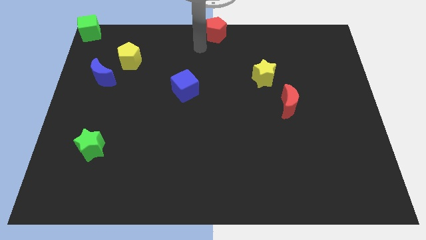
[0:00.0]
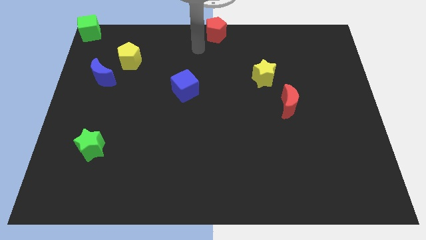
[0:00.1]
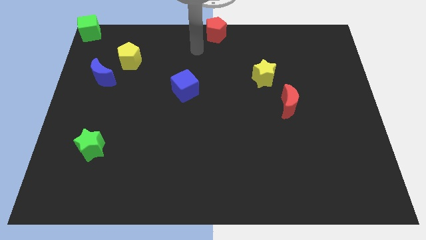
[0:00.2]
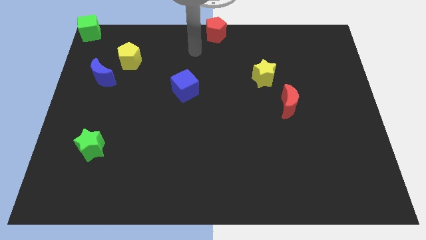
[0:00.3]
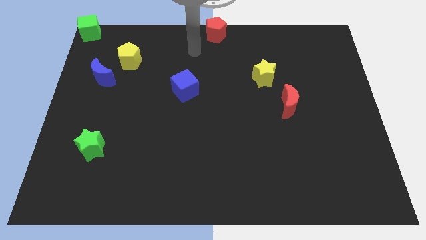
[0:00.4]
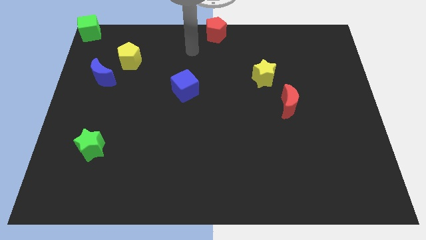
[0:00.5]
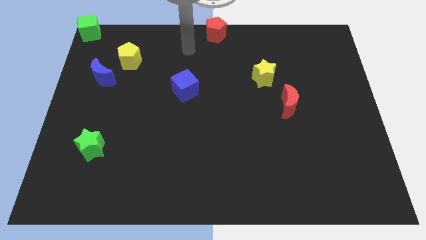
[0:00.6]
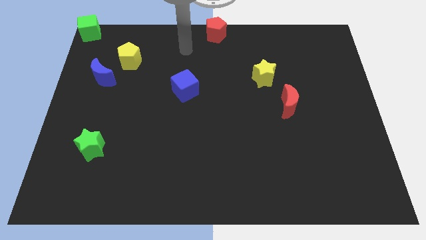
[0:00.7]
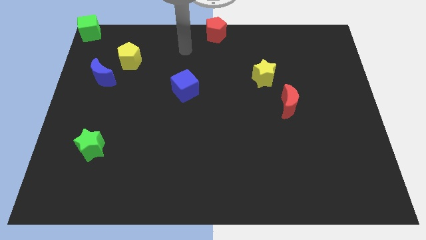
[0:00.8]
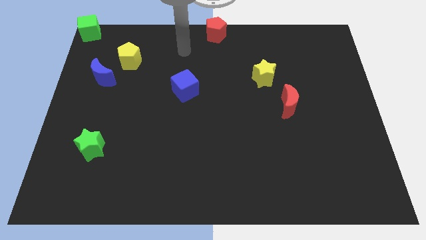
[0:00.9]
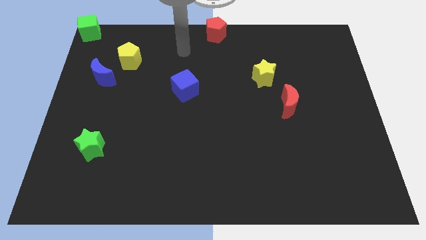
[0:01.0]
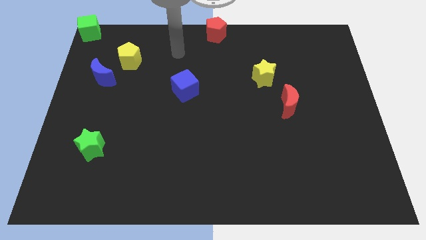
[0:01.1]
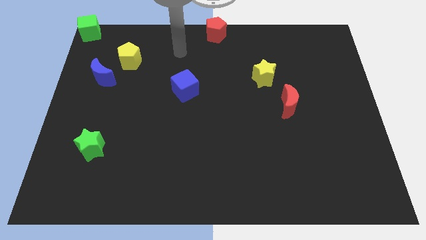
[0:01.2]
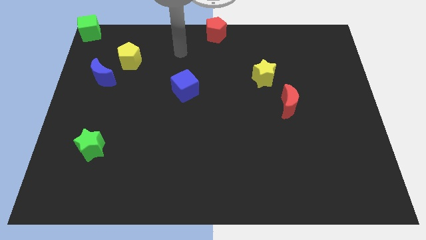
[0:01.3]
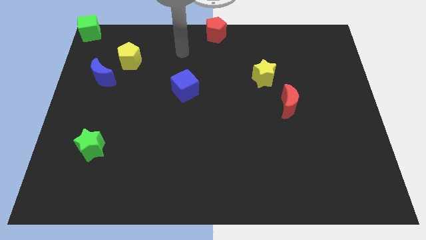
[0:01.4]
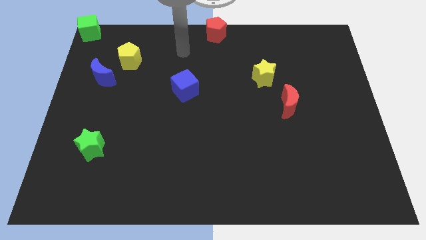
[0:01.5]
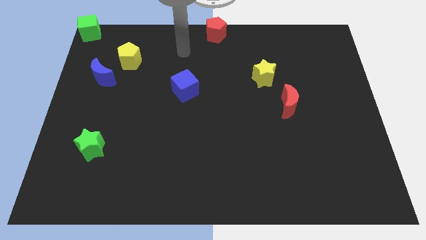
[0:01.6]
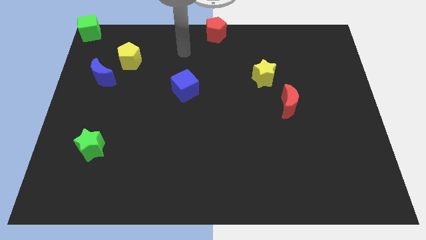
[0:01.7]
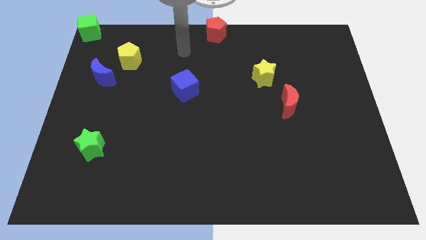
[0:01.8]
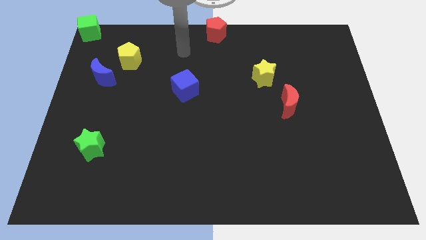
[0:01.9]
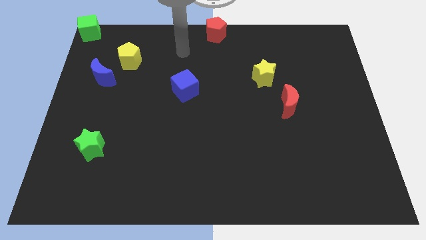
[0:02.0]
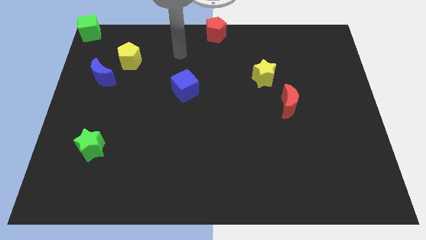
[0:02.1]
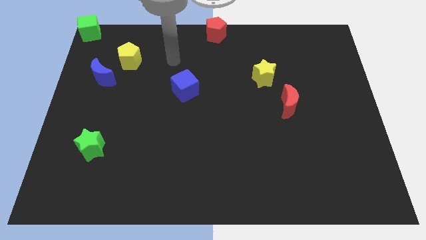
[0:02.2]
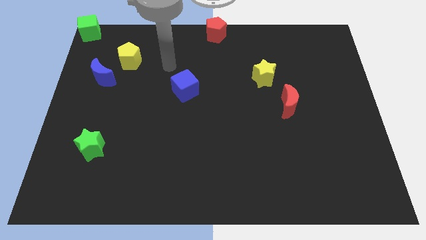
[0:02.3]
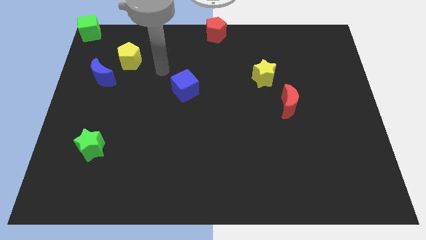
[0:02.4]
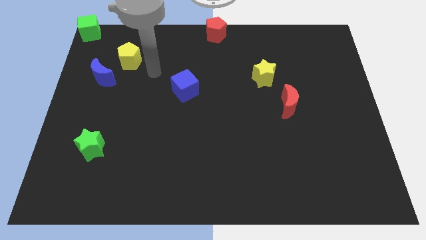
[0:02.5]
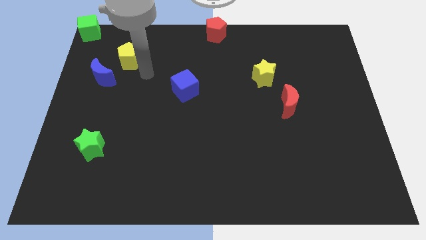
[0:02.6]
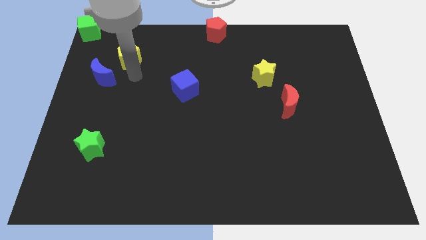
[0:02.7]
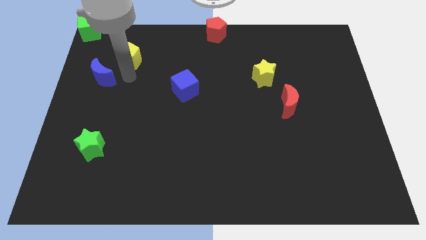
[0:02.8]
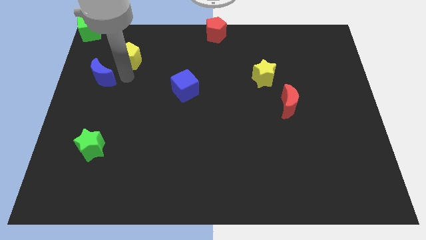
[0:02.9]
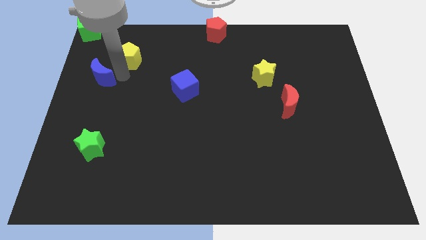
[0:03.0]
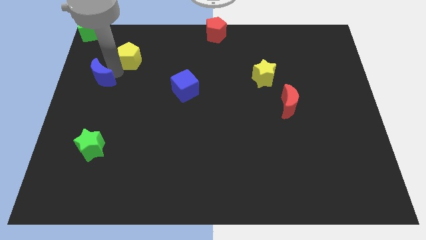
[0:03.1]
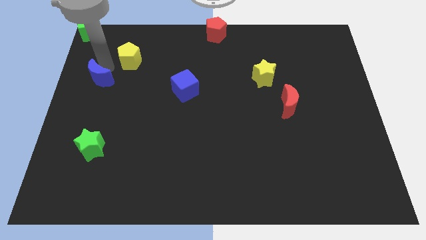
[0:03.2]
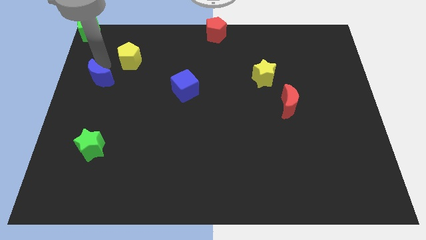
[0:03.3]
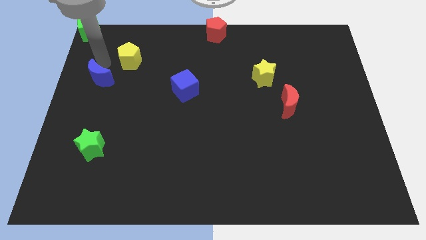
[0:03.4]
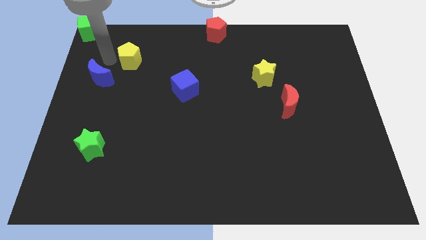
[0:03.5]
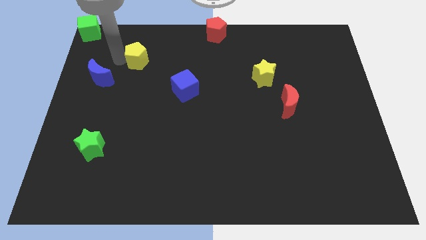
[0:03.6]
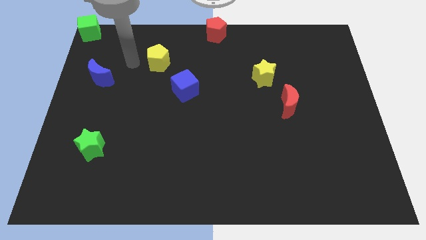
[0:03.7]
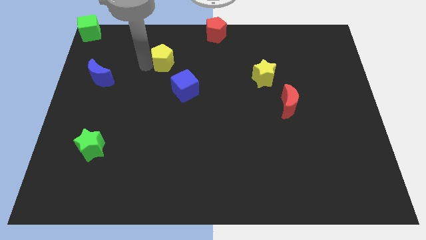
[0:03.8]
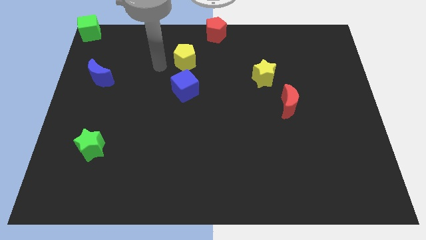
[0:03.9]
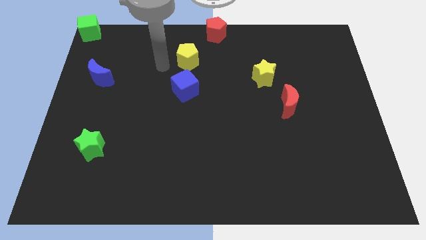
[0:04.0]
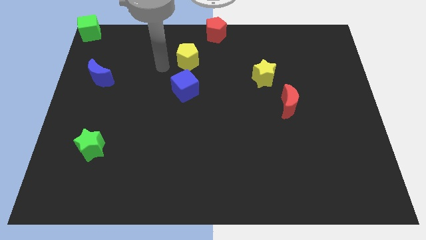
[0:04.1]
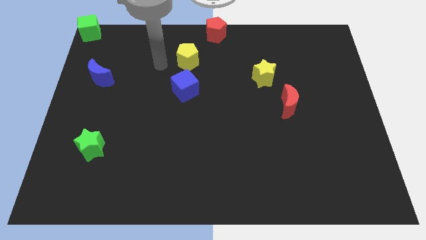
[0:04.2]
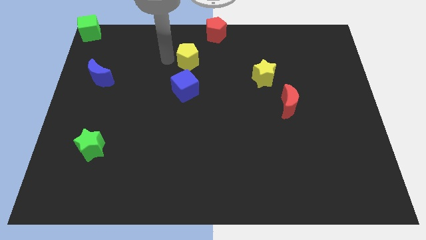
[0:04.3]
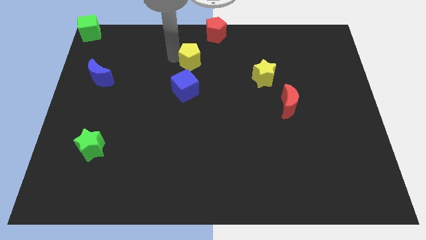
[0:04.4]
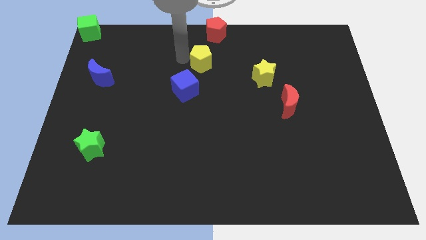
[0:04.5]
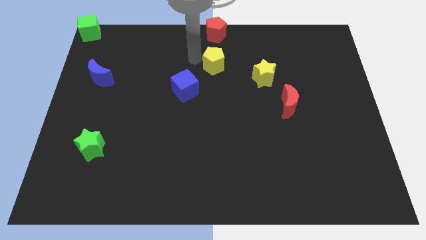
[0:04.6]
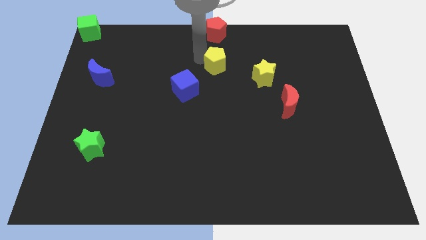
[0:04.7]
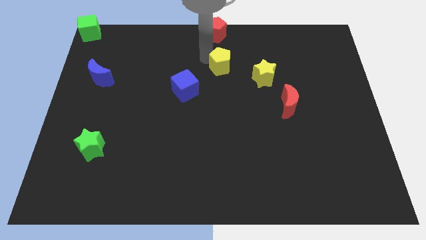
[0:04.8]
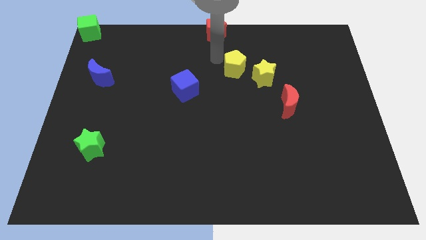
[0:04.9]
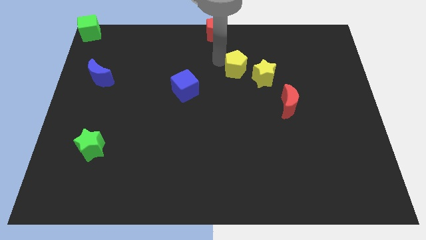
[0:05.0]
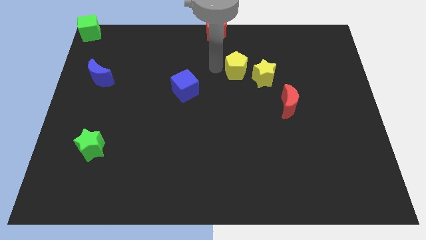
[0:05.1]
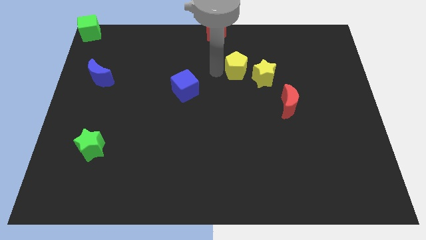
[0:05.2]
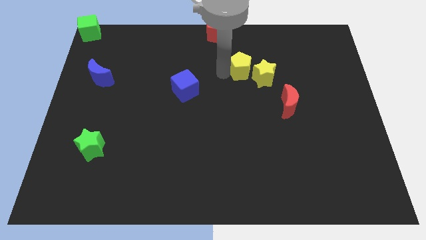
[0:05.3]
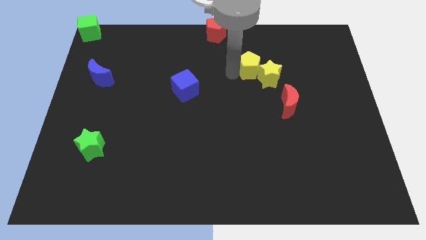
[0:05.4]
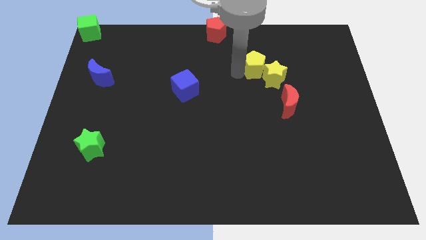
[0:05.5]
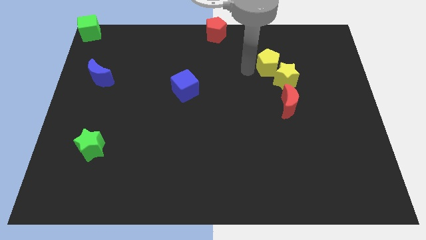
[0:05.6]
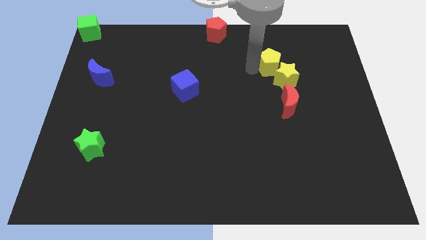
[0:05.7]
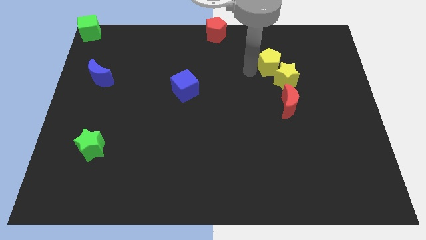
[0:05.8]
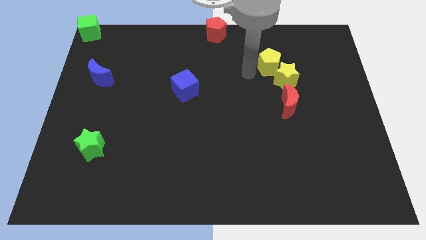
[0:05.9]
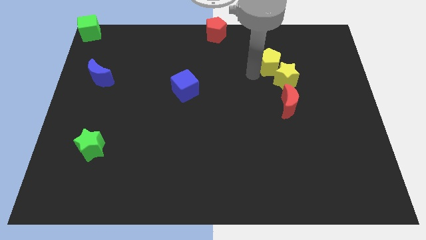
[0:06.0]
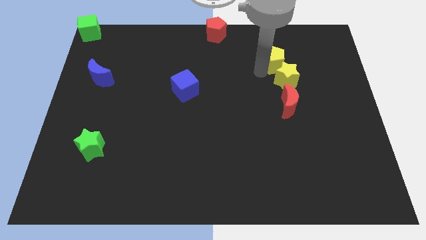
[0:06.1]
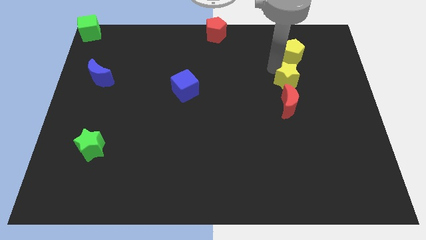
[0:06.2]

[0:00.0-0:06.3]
push the yellow pentagon into the yellow star

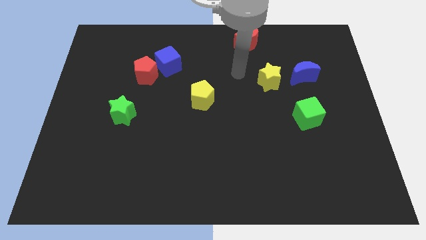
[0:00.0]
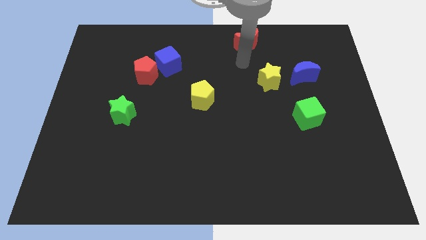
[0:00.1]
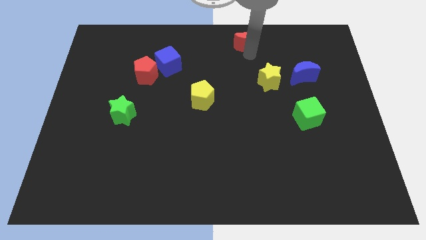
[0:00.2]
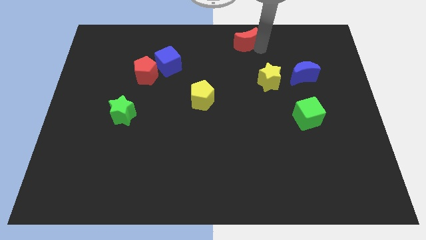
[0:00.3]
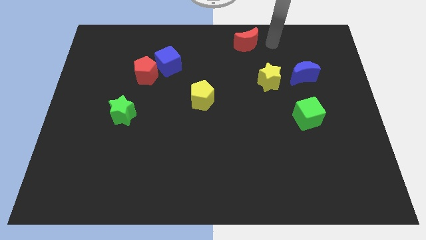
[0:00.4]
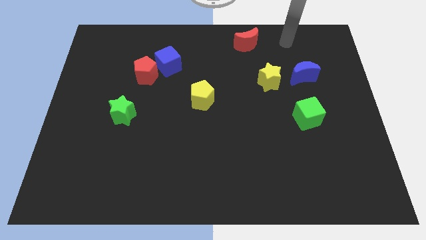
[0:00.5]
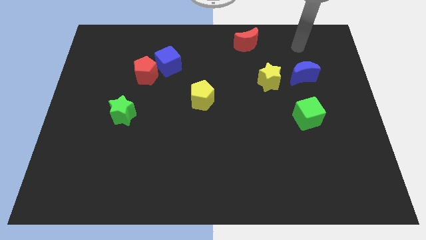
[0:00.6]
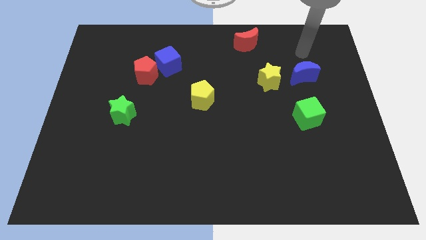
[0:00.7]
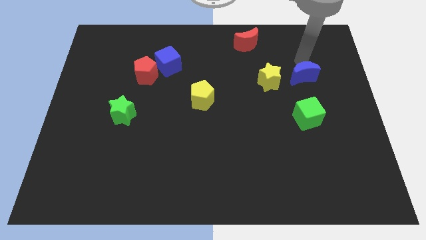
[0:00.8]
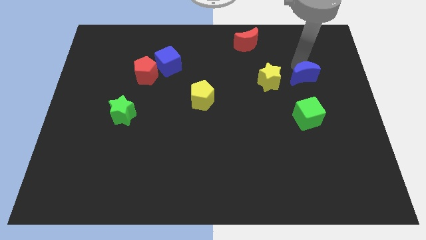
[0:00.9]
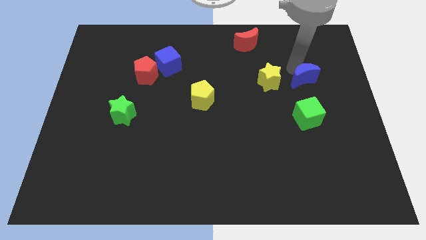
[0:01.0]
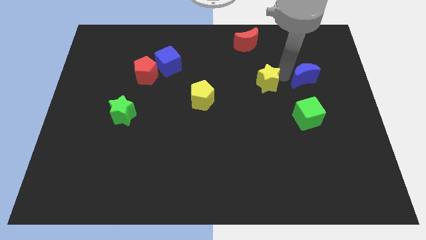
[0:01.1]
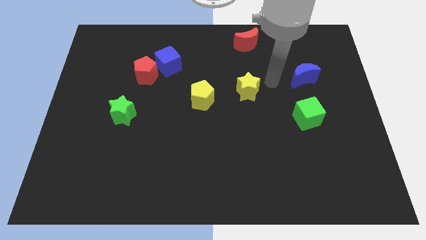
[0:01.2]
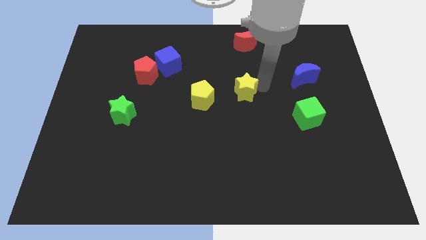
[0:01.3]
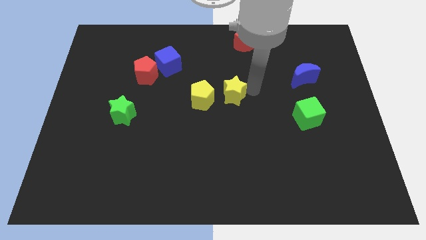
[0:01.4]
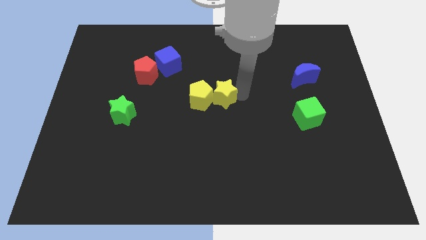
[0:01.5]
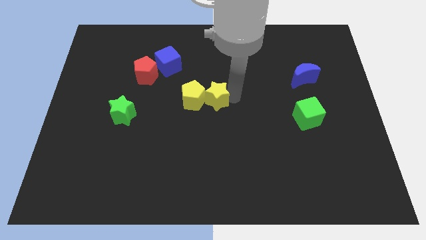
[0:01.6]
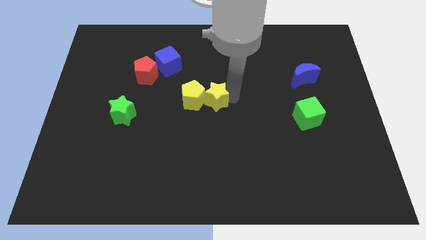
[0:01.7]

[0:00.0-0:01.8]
drag the yellow star towards the center

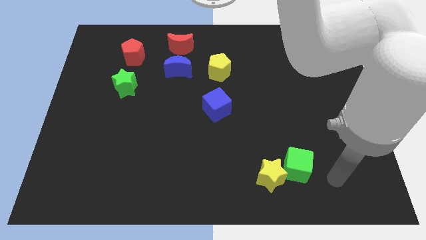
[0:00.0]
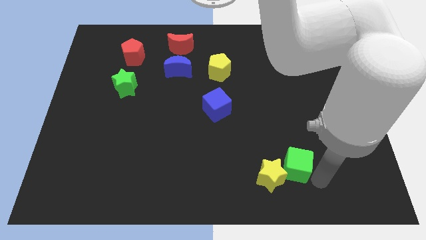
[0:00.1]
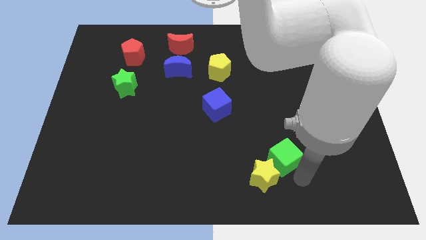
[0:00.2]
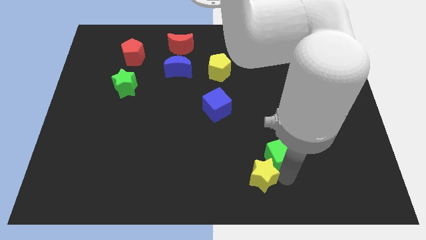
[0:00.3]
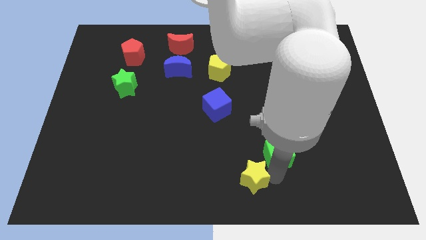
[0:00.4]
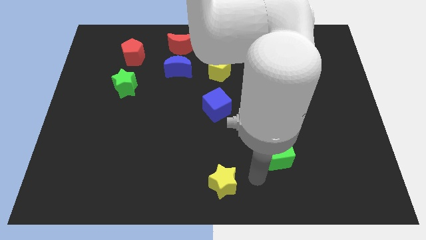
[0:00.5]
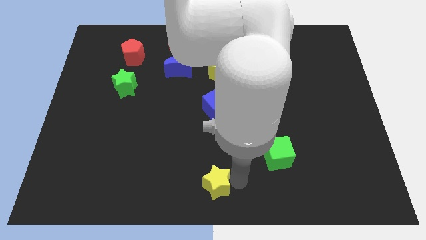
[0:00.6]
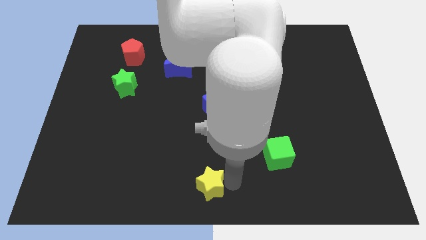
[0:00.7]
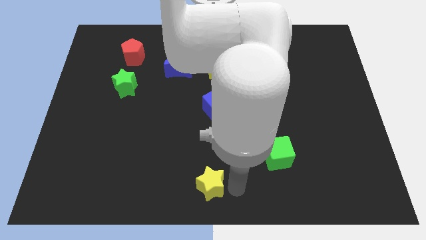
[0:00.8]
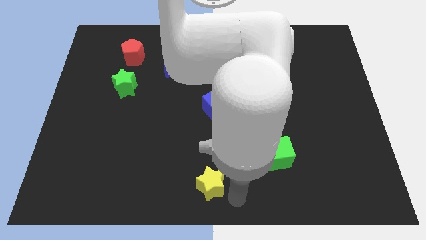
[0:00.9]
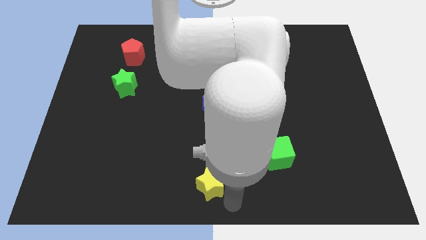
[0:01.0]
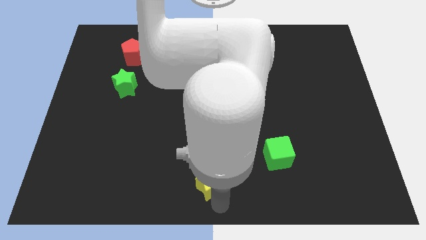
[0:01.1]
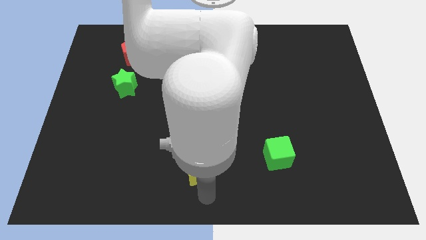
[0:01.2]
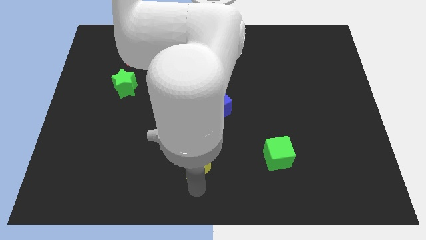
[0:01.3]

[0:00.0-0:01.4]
separate the green cube and the yellow star
